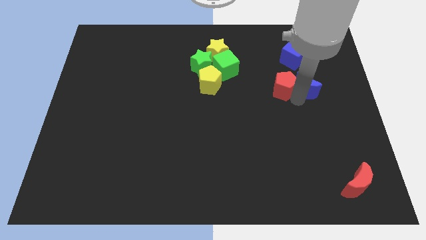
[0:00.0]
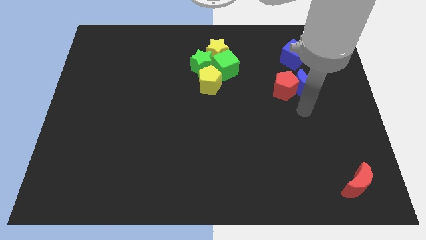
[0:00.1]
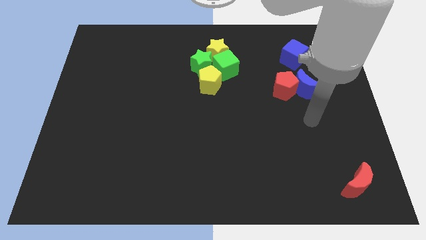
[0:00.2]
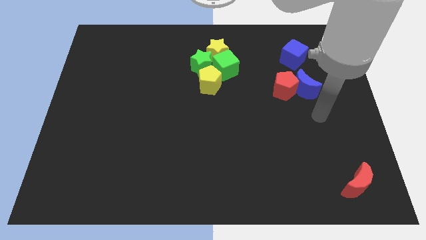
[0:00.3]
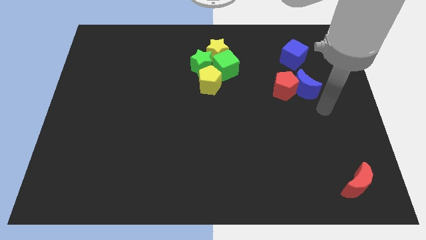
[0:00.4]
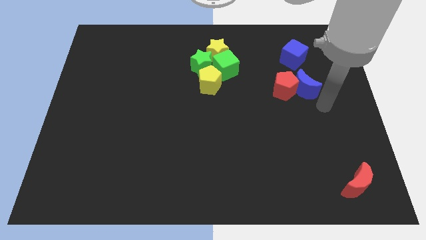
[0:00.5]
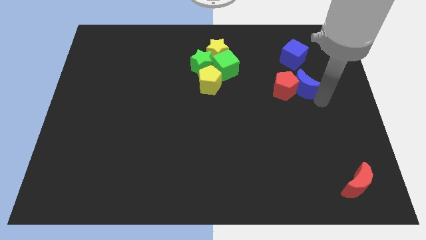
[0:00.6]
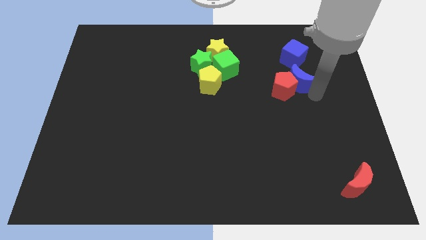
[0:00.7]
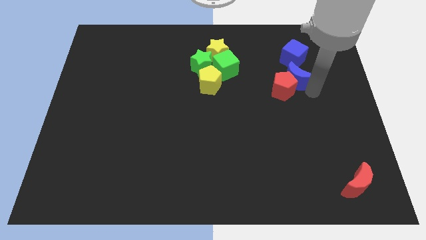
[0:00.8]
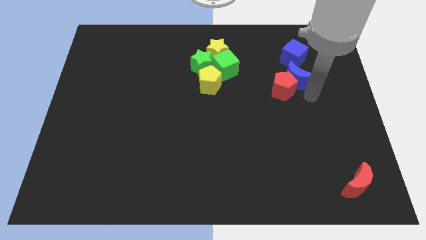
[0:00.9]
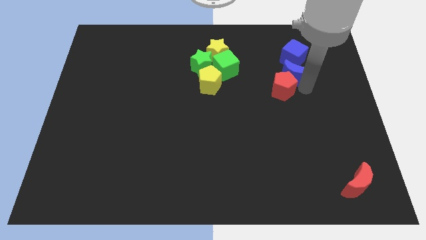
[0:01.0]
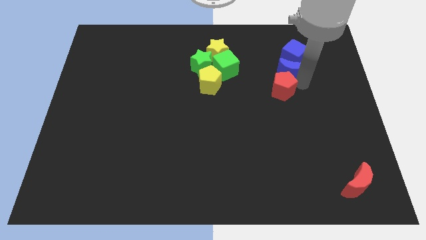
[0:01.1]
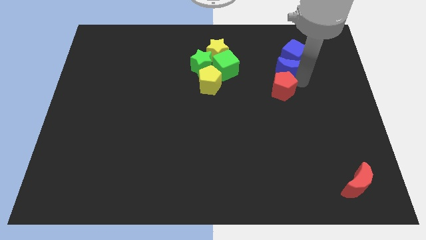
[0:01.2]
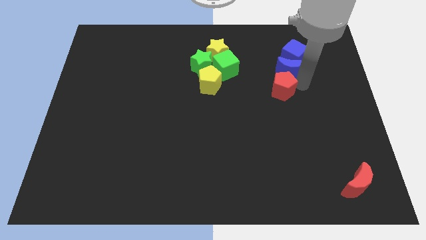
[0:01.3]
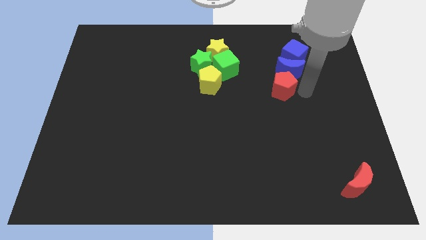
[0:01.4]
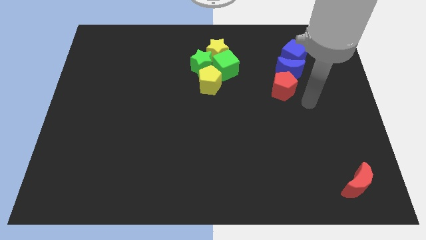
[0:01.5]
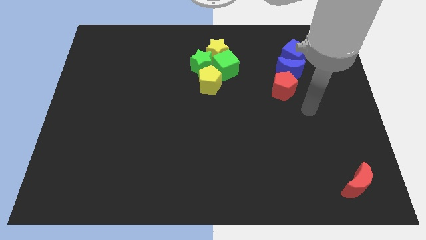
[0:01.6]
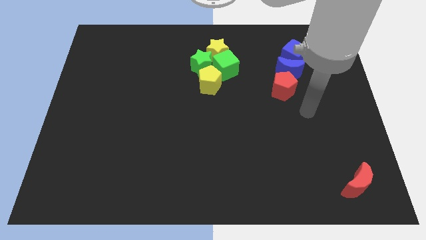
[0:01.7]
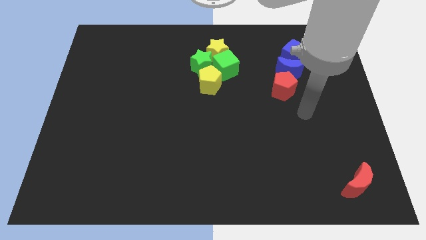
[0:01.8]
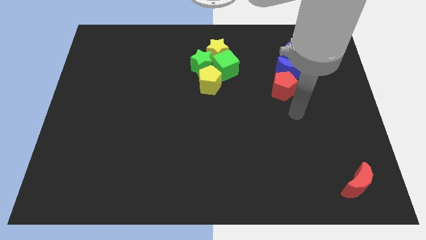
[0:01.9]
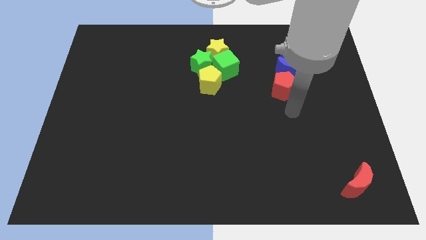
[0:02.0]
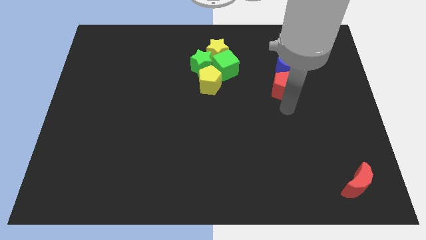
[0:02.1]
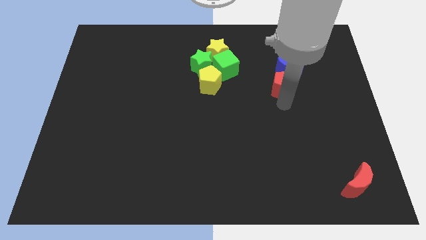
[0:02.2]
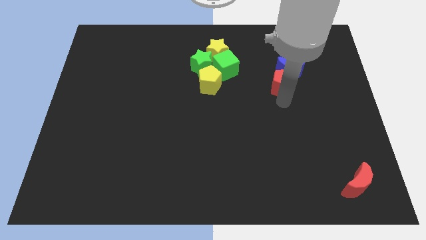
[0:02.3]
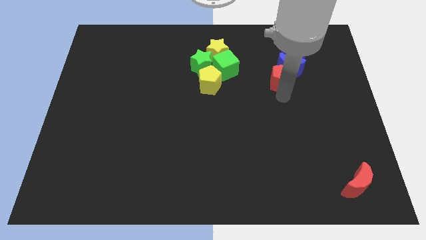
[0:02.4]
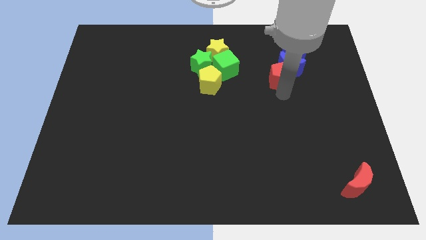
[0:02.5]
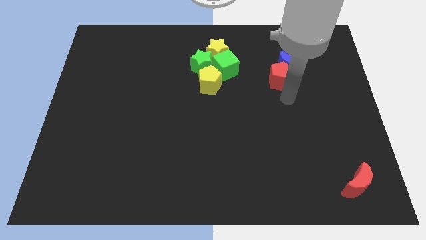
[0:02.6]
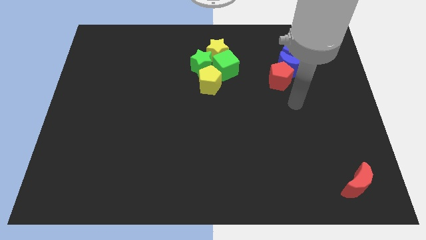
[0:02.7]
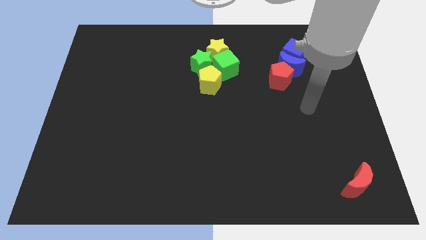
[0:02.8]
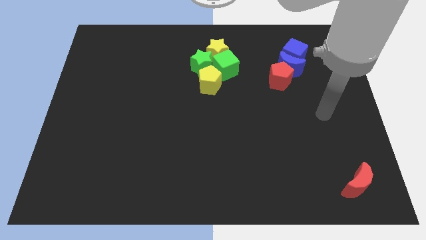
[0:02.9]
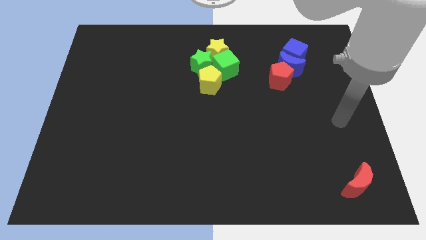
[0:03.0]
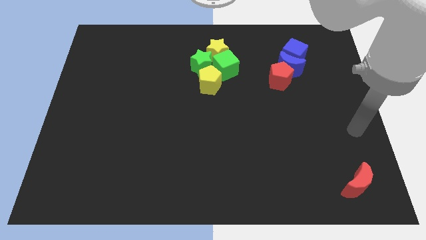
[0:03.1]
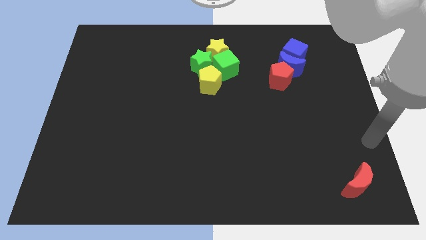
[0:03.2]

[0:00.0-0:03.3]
adjust the blue crescent and red pentagon below the blue cube

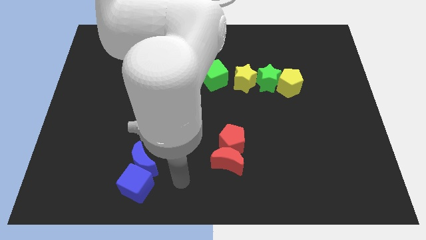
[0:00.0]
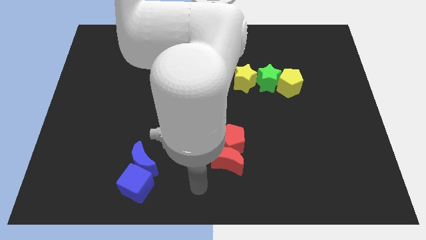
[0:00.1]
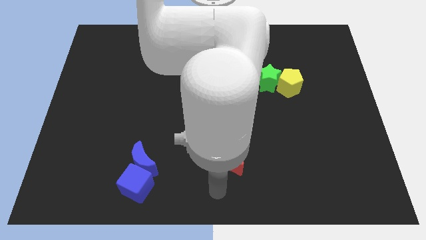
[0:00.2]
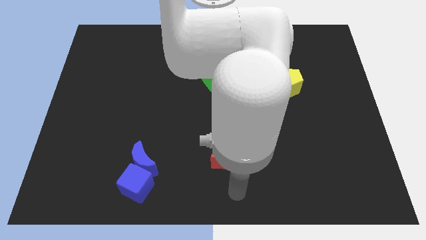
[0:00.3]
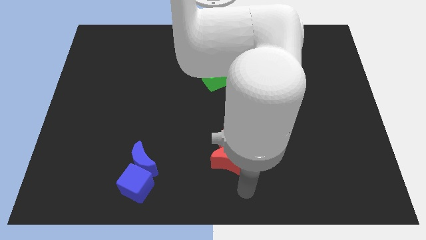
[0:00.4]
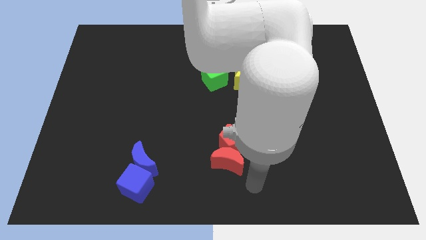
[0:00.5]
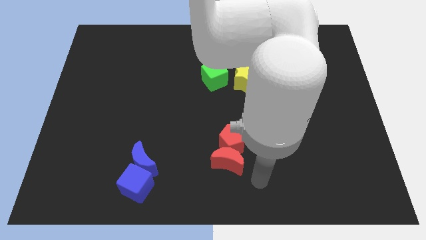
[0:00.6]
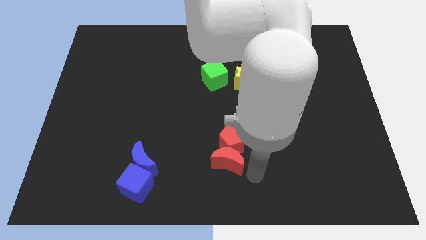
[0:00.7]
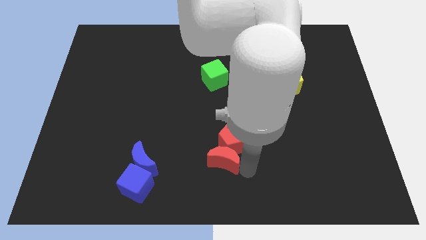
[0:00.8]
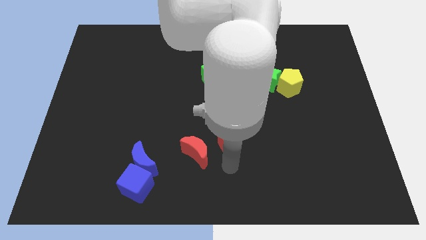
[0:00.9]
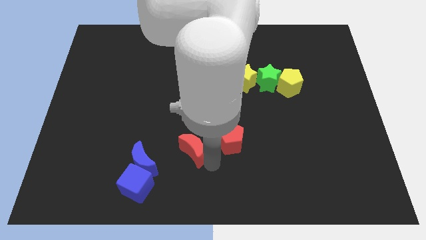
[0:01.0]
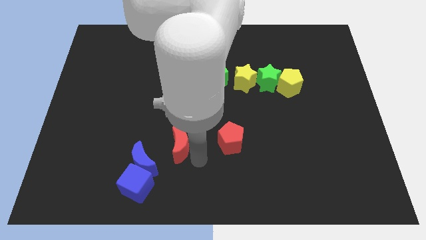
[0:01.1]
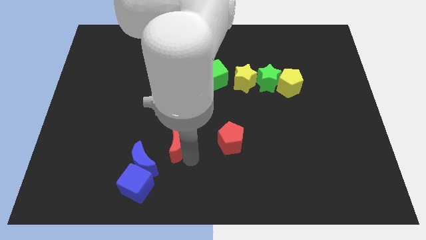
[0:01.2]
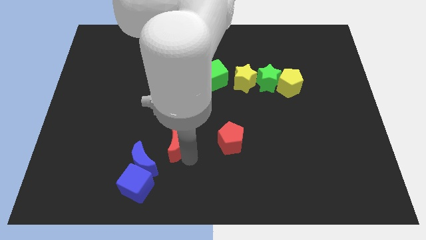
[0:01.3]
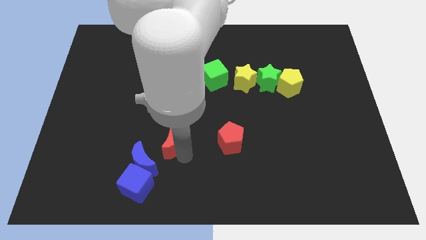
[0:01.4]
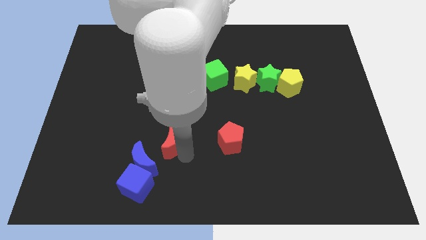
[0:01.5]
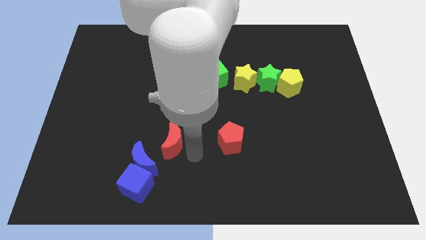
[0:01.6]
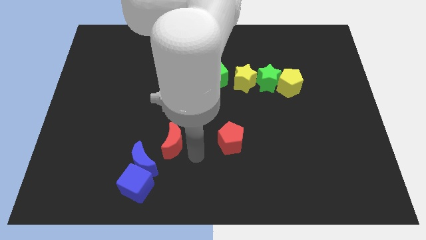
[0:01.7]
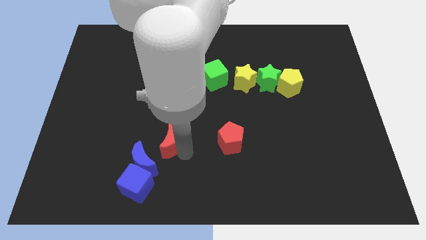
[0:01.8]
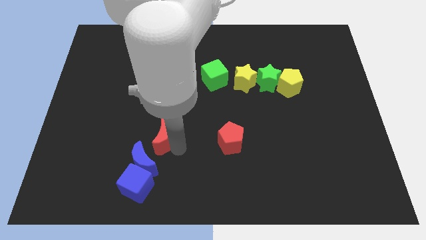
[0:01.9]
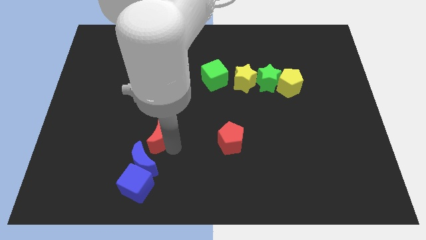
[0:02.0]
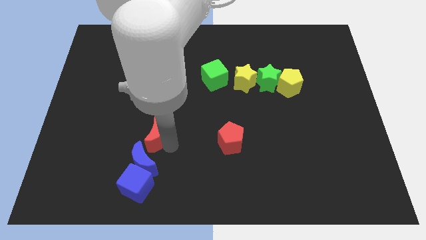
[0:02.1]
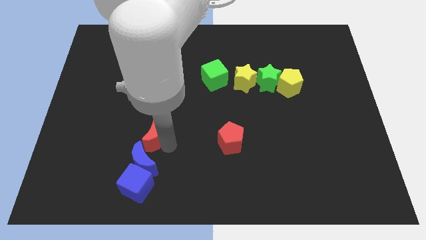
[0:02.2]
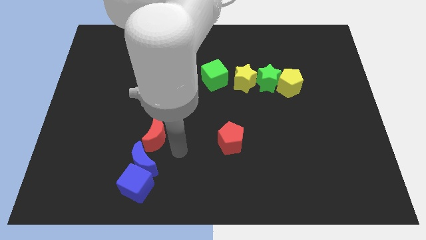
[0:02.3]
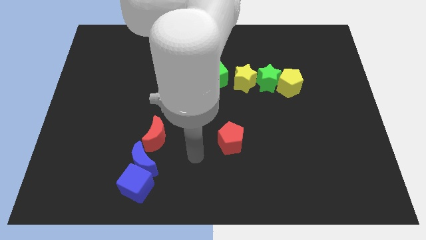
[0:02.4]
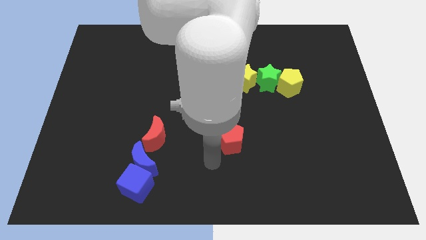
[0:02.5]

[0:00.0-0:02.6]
place the red moon at the top of the blue moon

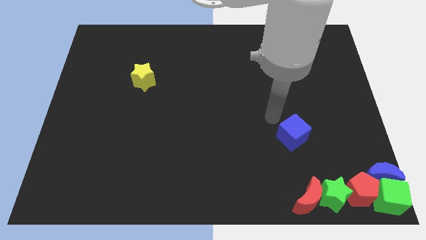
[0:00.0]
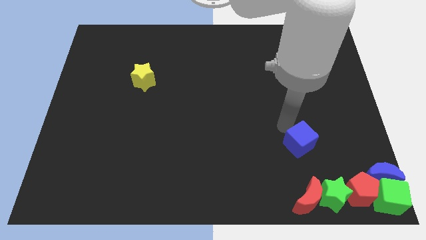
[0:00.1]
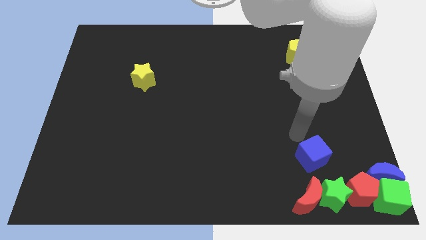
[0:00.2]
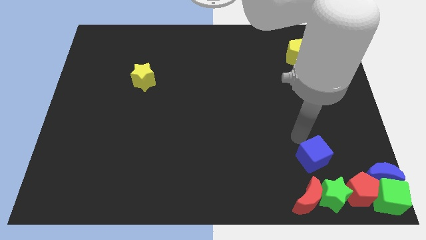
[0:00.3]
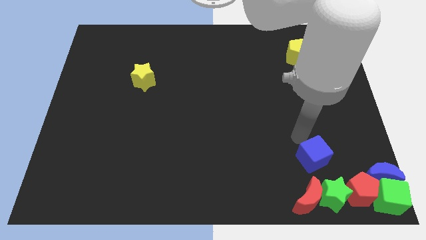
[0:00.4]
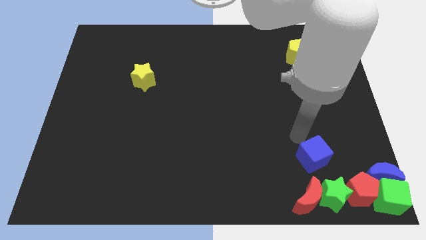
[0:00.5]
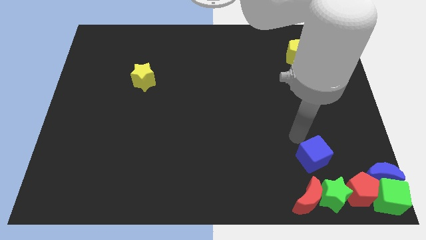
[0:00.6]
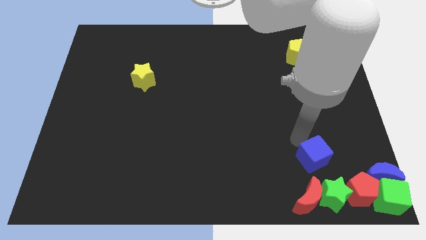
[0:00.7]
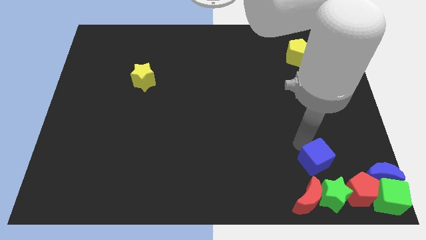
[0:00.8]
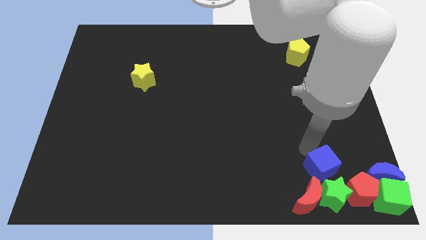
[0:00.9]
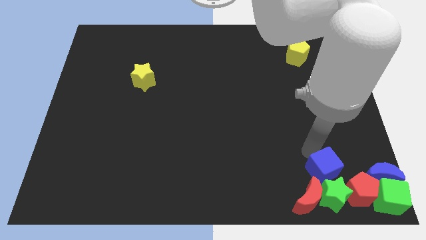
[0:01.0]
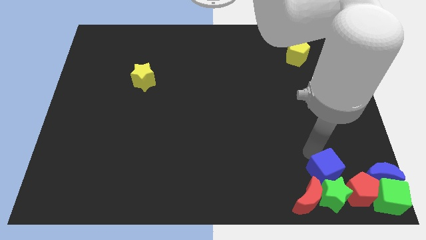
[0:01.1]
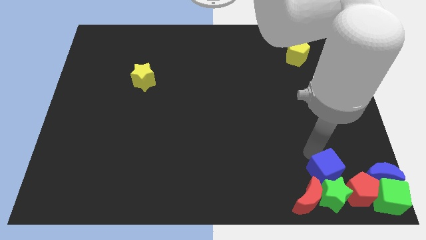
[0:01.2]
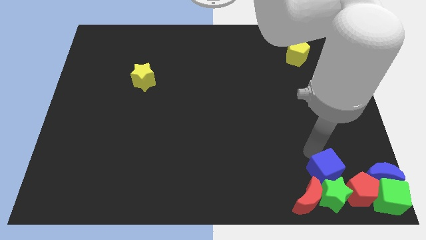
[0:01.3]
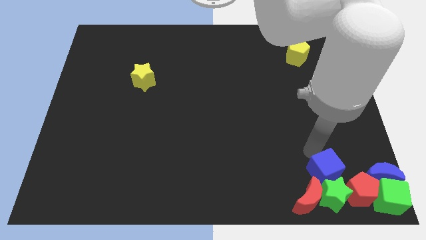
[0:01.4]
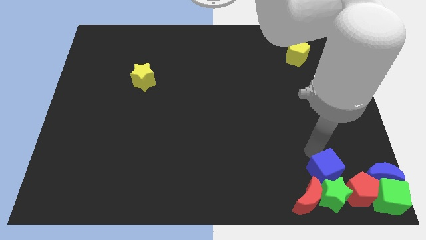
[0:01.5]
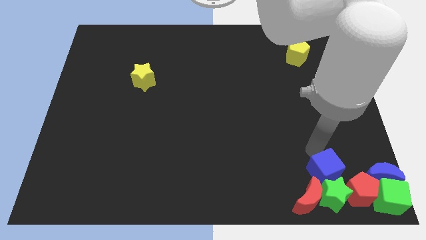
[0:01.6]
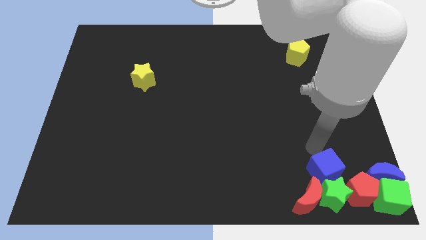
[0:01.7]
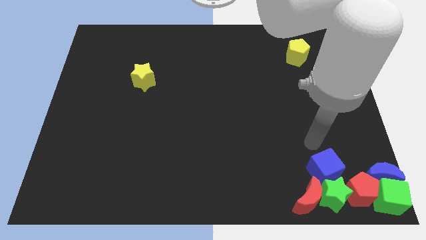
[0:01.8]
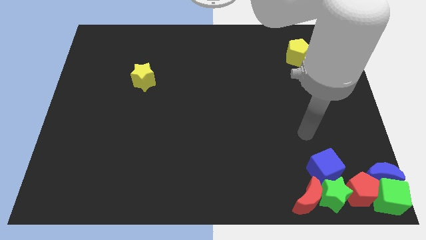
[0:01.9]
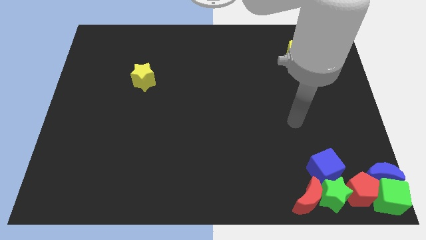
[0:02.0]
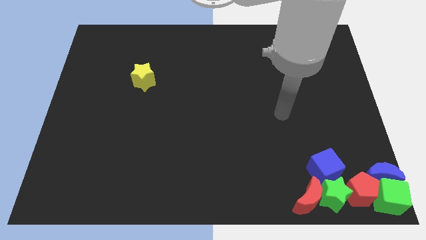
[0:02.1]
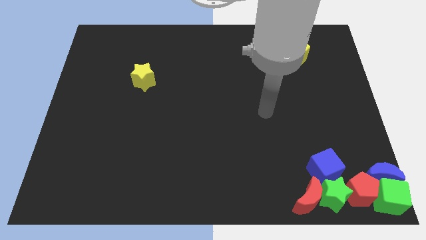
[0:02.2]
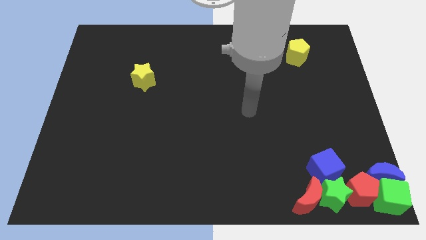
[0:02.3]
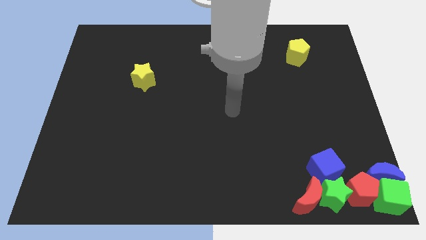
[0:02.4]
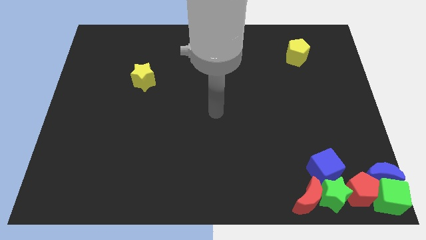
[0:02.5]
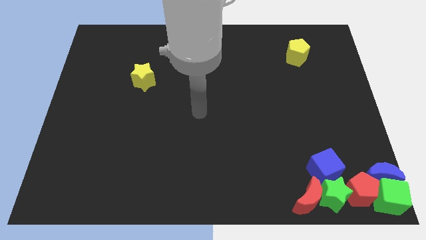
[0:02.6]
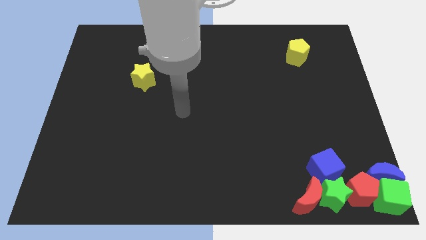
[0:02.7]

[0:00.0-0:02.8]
move the blue cube into the top of the green star

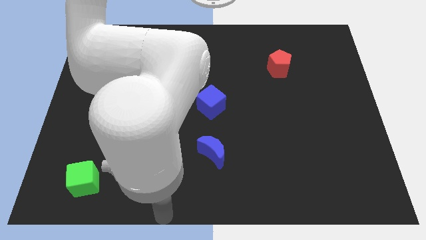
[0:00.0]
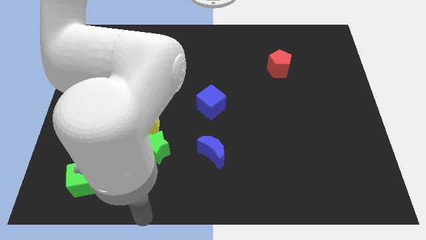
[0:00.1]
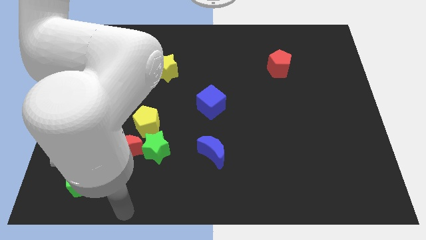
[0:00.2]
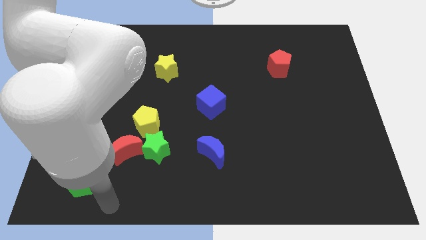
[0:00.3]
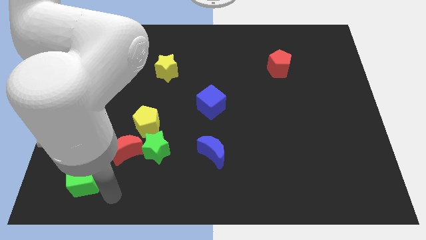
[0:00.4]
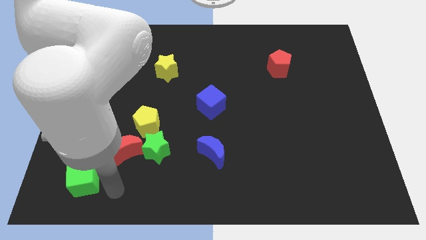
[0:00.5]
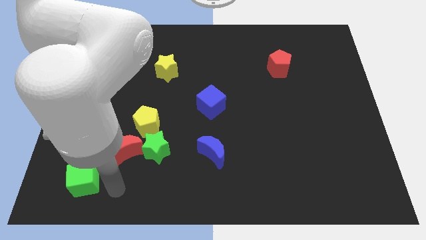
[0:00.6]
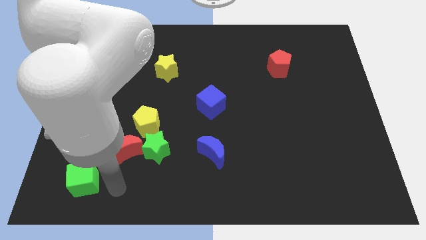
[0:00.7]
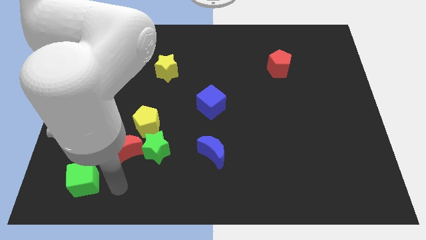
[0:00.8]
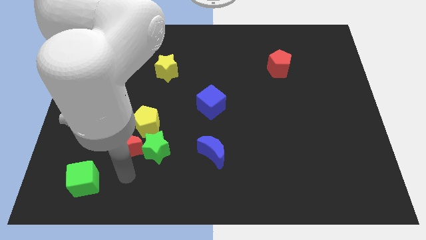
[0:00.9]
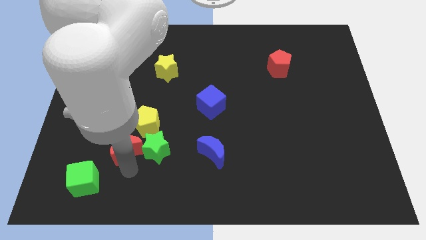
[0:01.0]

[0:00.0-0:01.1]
tap your hand below the red moon
